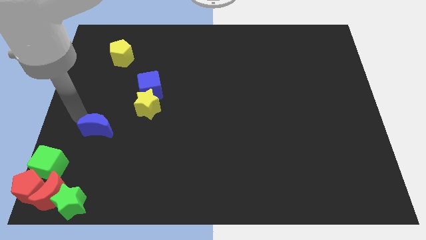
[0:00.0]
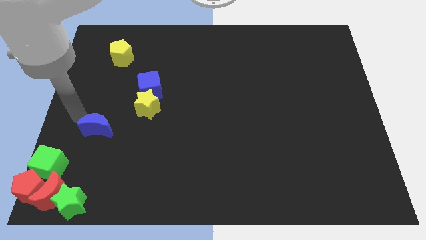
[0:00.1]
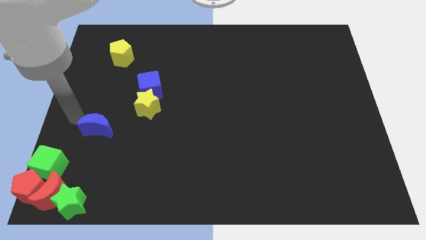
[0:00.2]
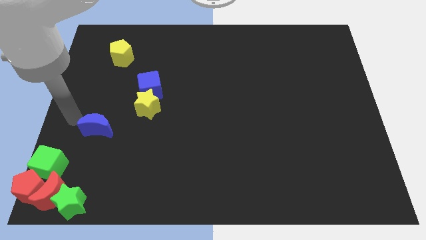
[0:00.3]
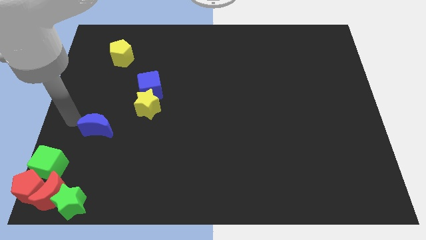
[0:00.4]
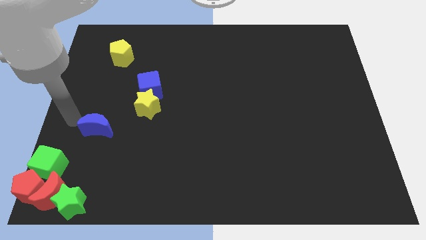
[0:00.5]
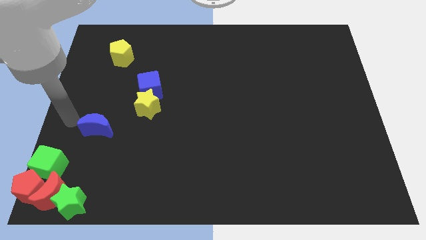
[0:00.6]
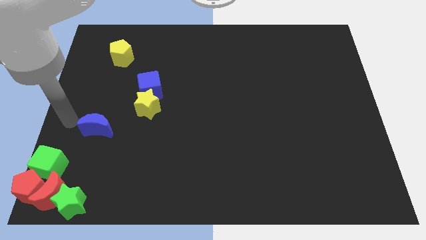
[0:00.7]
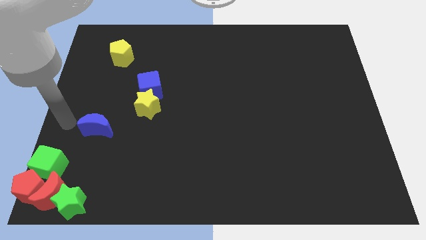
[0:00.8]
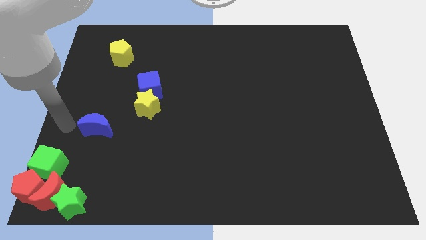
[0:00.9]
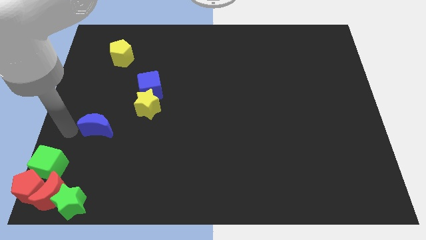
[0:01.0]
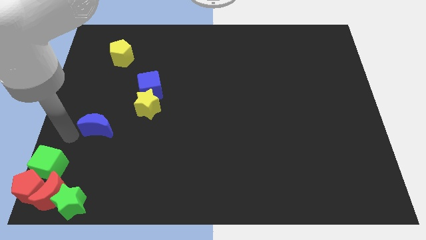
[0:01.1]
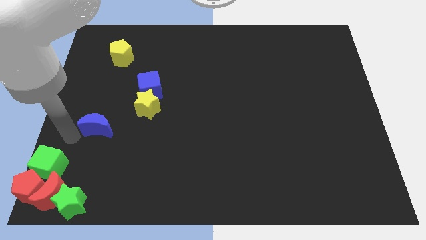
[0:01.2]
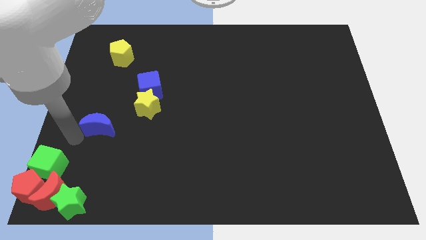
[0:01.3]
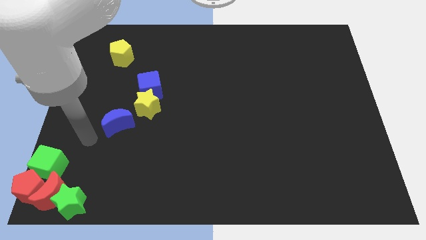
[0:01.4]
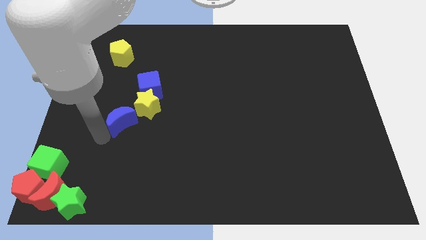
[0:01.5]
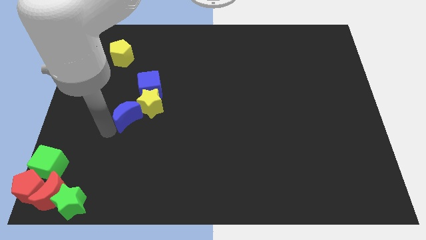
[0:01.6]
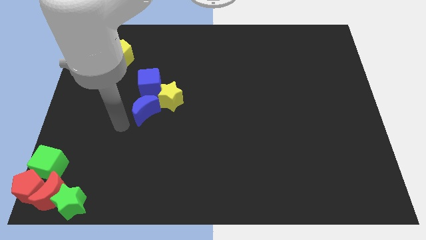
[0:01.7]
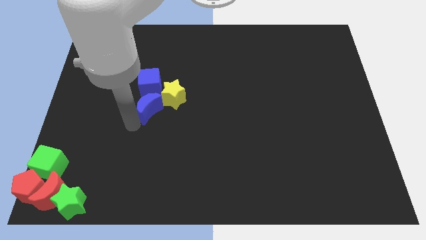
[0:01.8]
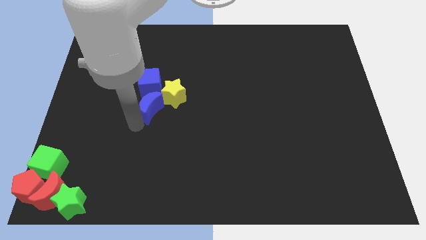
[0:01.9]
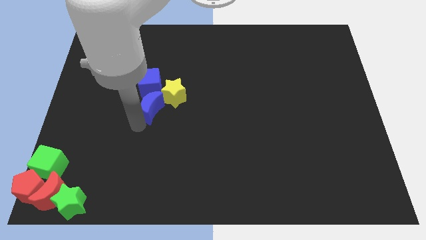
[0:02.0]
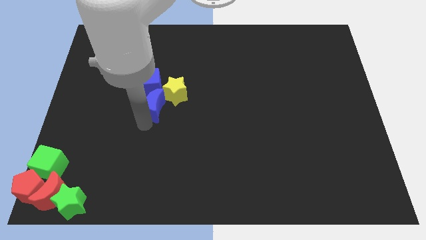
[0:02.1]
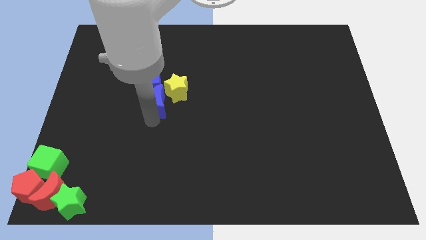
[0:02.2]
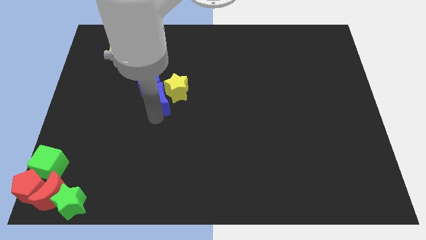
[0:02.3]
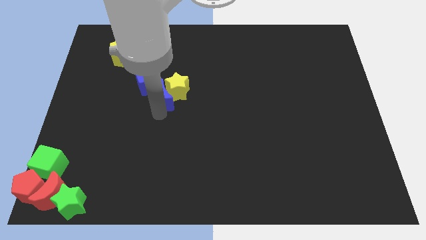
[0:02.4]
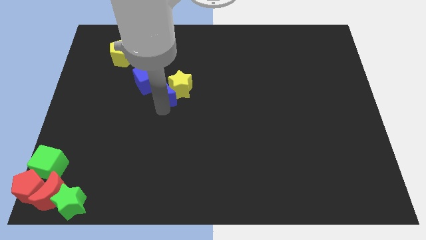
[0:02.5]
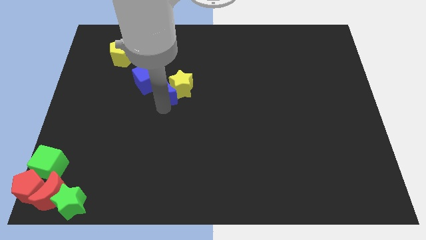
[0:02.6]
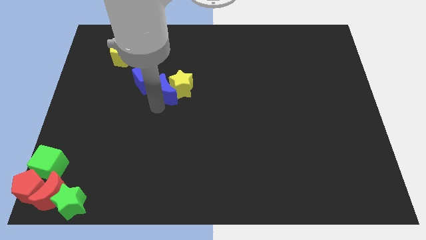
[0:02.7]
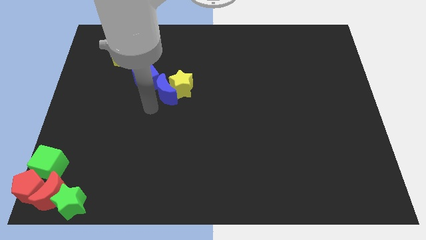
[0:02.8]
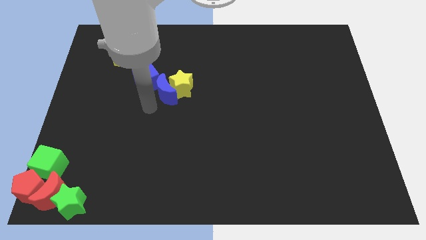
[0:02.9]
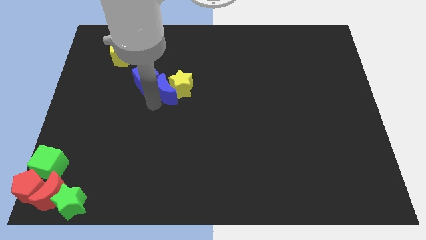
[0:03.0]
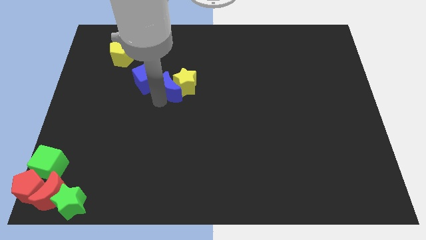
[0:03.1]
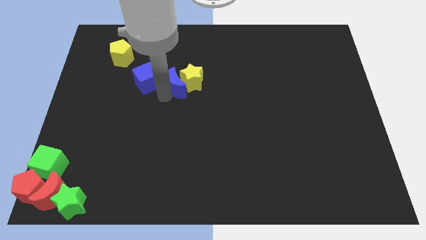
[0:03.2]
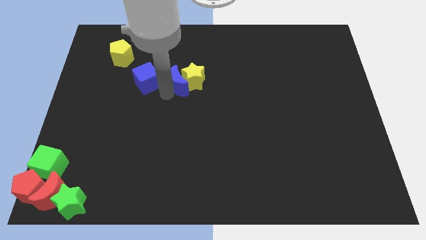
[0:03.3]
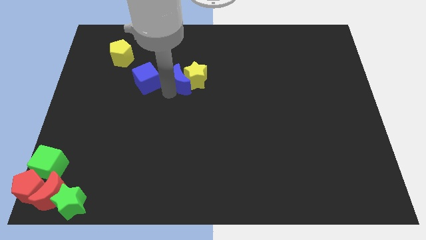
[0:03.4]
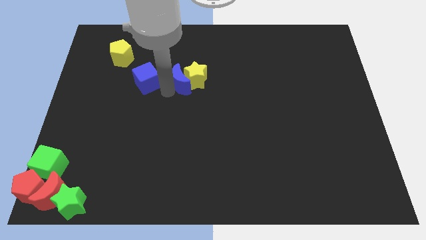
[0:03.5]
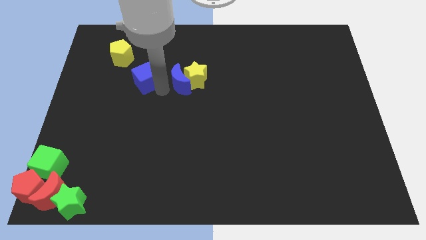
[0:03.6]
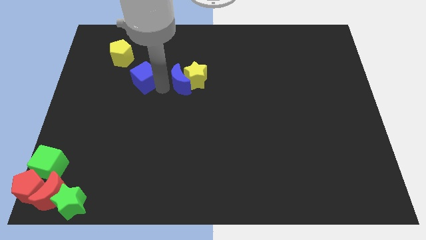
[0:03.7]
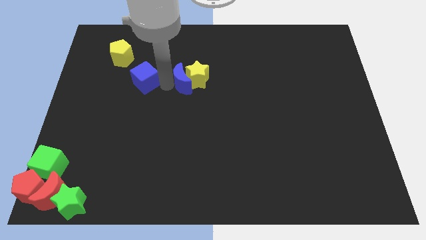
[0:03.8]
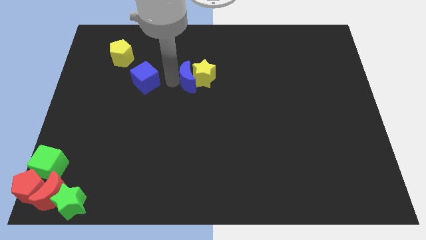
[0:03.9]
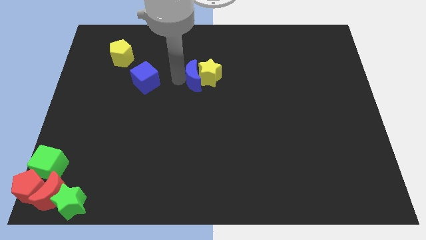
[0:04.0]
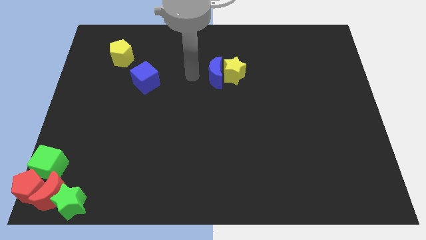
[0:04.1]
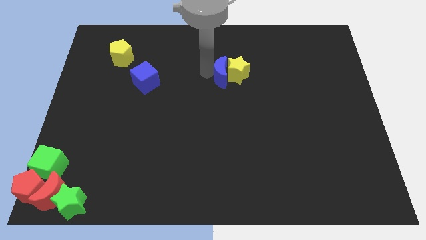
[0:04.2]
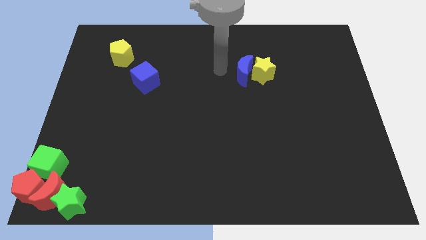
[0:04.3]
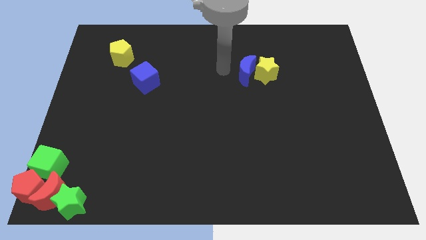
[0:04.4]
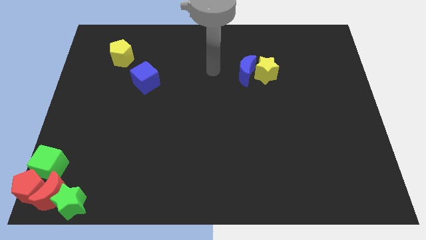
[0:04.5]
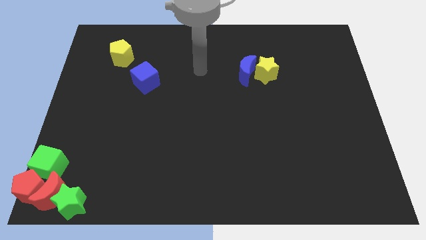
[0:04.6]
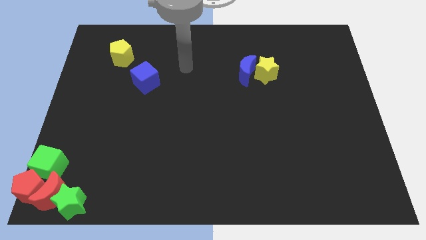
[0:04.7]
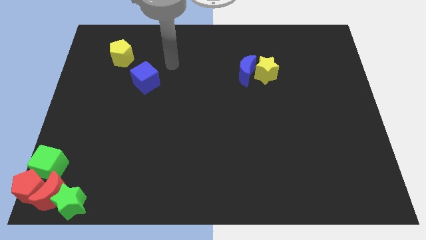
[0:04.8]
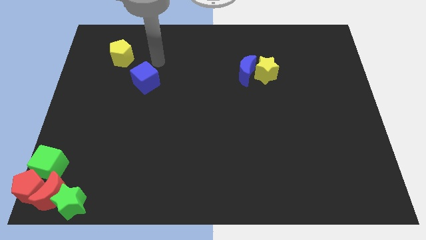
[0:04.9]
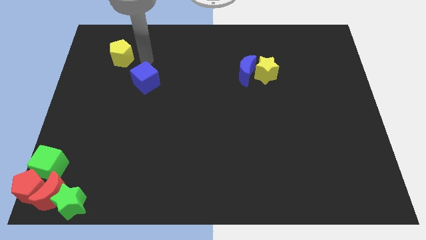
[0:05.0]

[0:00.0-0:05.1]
push both the yellow star and blue crescent towards the top of the board

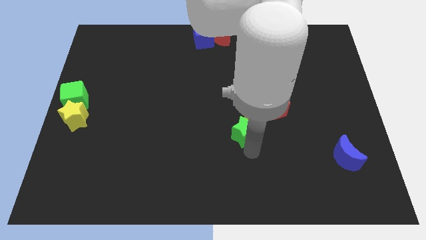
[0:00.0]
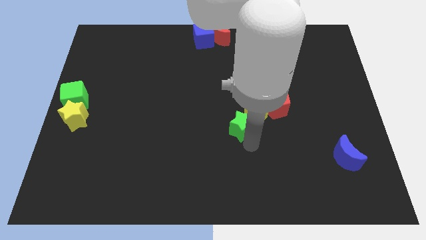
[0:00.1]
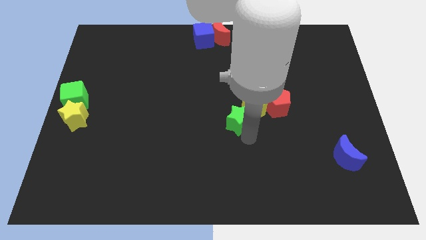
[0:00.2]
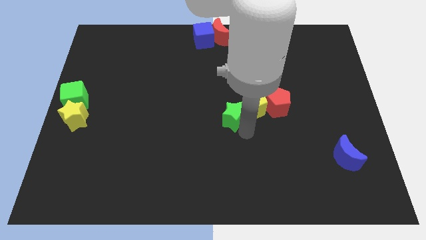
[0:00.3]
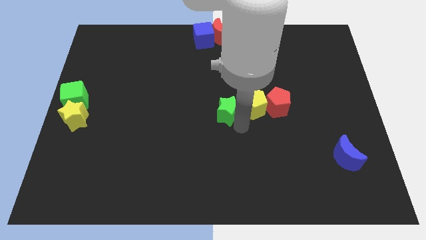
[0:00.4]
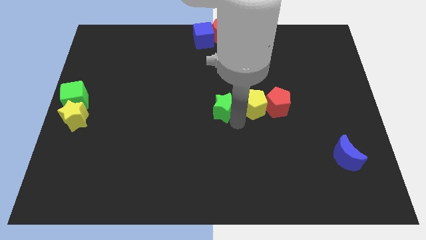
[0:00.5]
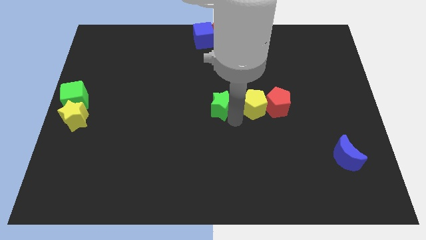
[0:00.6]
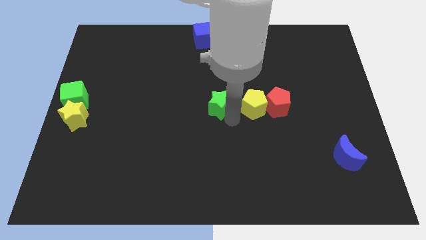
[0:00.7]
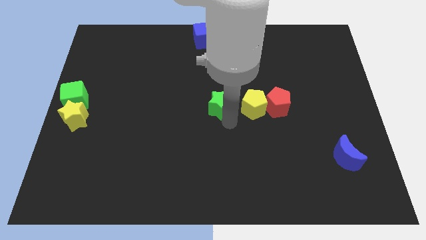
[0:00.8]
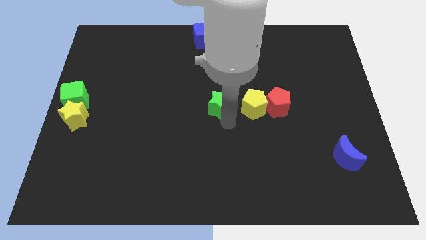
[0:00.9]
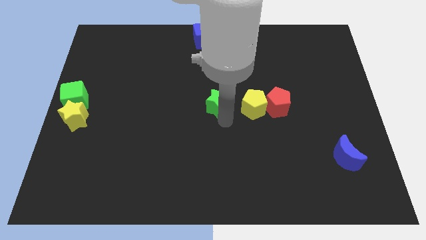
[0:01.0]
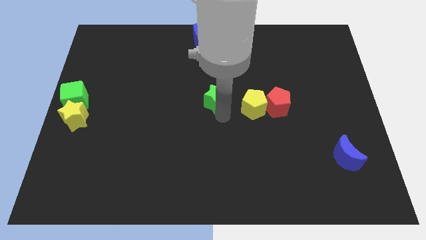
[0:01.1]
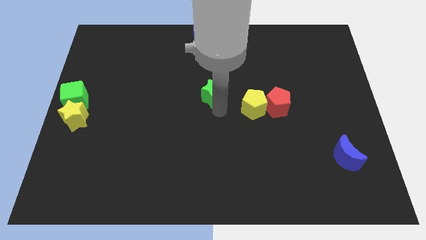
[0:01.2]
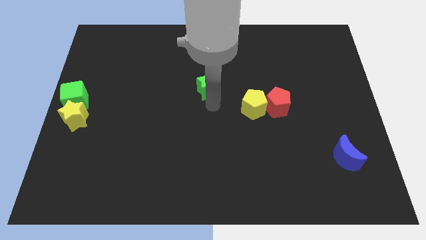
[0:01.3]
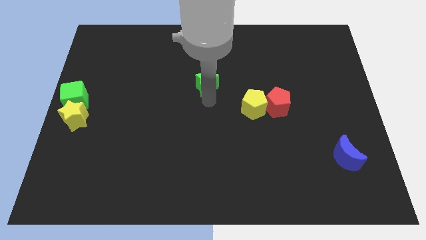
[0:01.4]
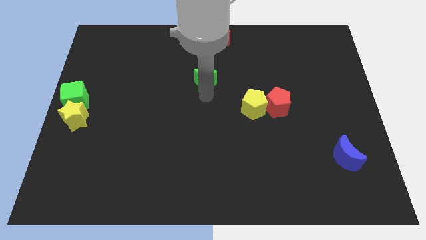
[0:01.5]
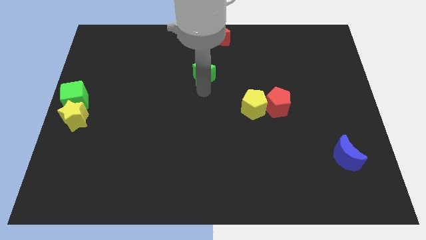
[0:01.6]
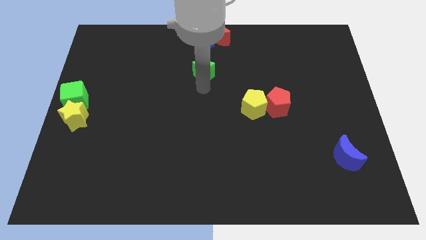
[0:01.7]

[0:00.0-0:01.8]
push the green star towards bottom of blue cube

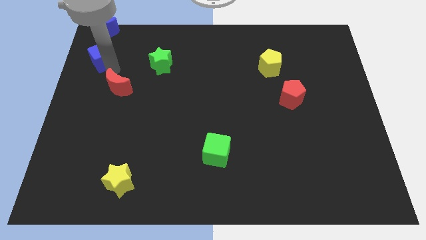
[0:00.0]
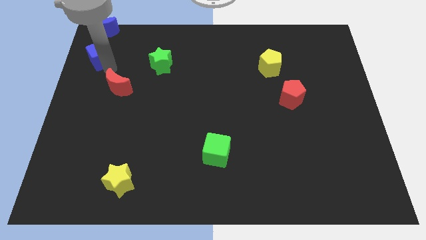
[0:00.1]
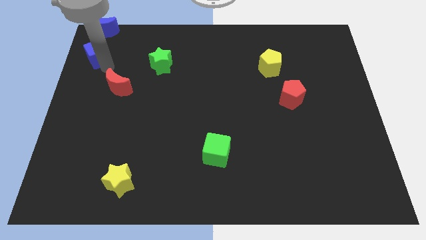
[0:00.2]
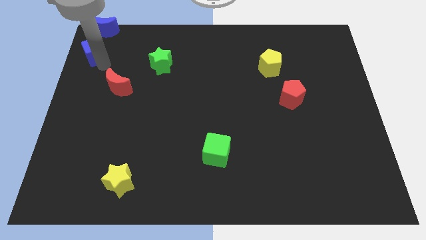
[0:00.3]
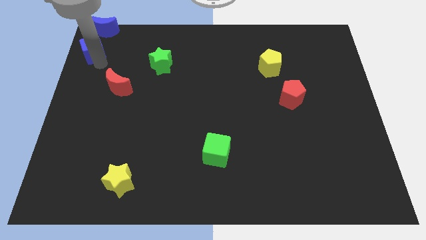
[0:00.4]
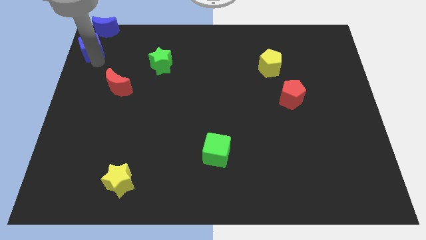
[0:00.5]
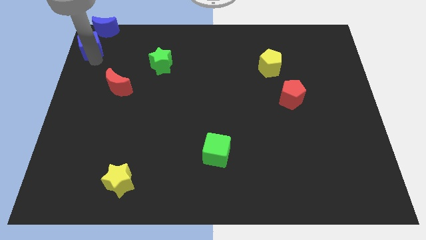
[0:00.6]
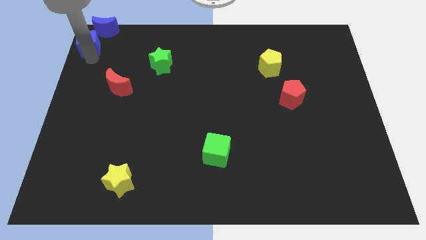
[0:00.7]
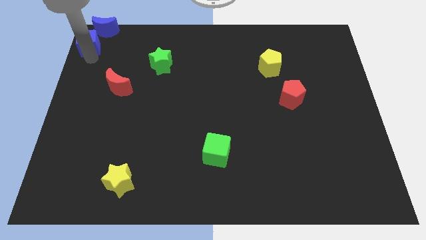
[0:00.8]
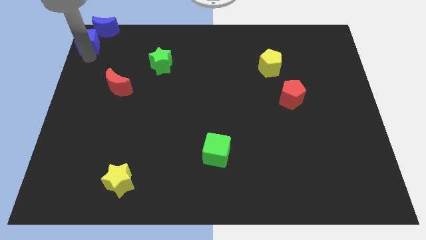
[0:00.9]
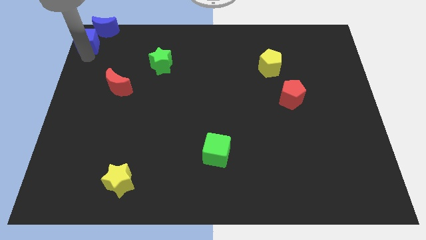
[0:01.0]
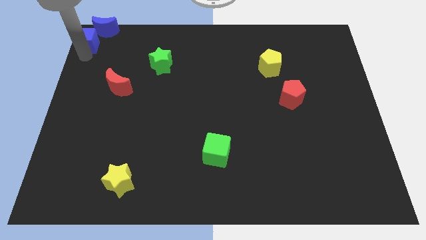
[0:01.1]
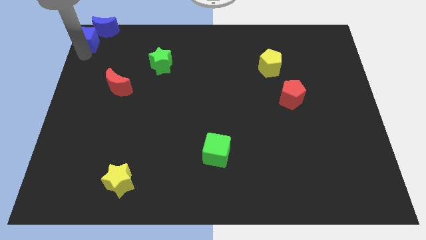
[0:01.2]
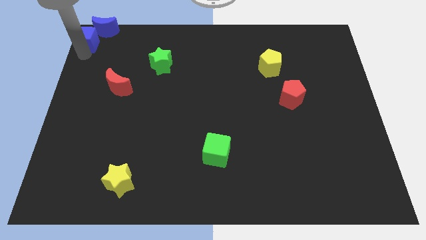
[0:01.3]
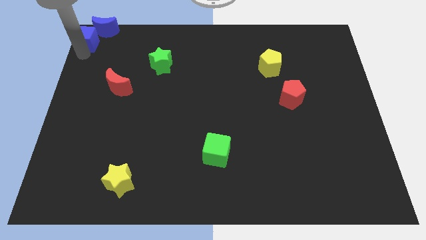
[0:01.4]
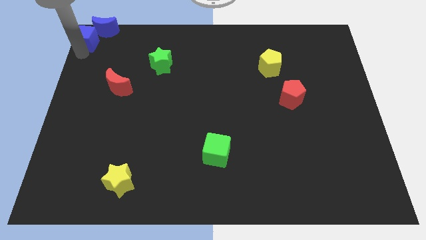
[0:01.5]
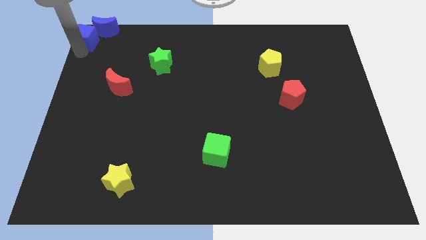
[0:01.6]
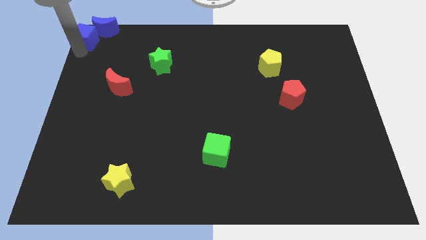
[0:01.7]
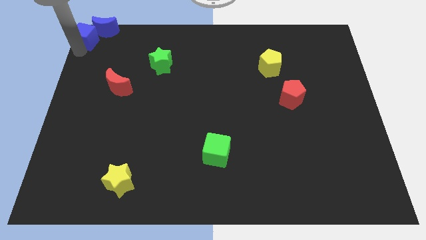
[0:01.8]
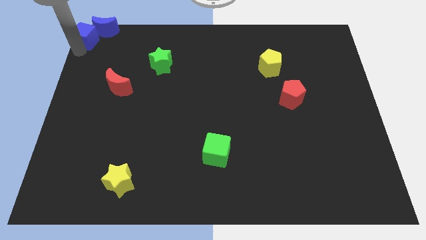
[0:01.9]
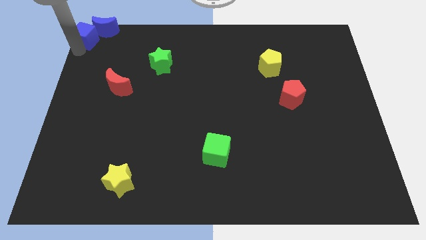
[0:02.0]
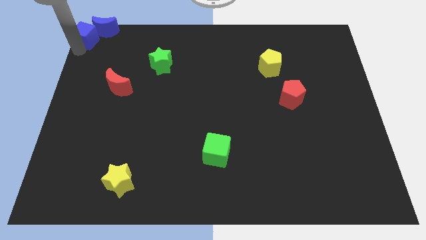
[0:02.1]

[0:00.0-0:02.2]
push the blue cube close to the blue crescent
